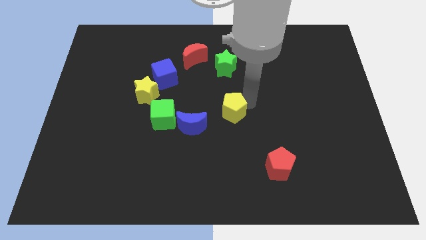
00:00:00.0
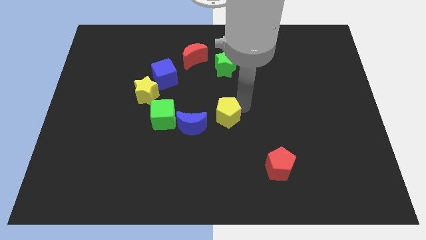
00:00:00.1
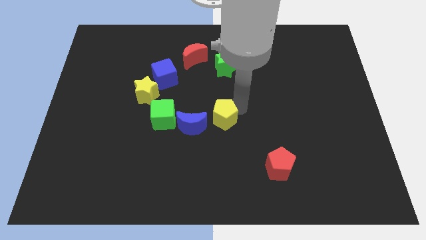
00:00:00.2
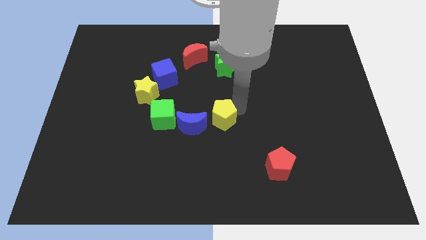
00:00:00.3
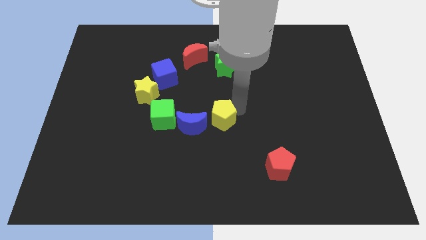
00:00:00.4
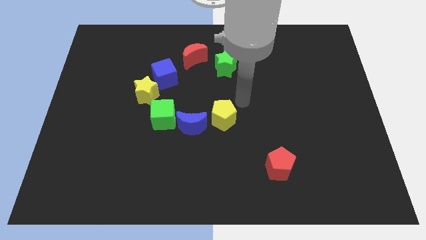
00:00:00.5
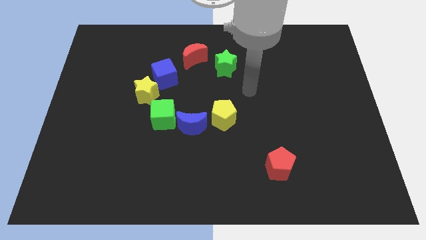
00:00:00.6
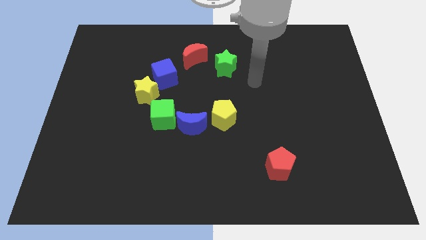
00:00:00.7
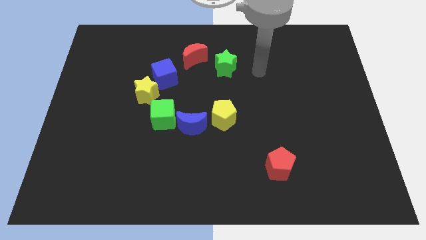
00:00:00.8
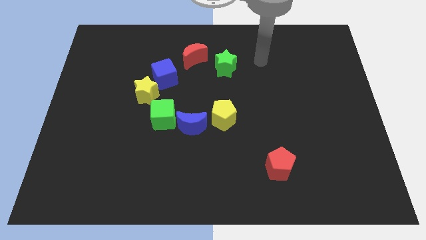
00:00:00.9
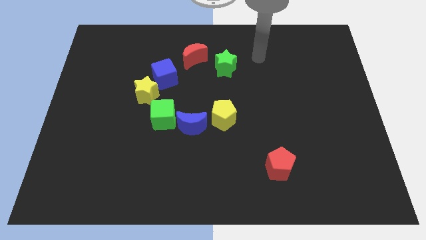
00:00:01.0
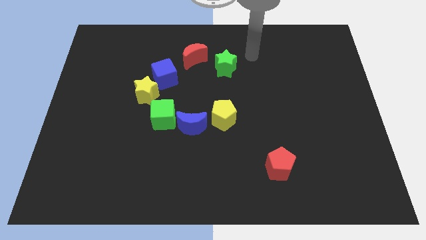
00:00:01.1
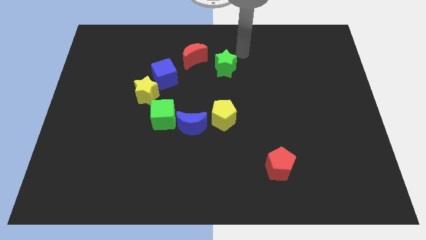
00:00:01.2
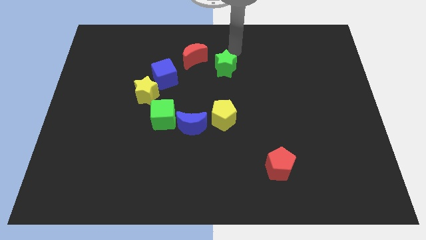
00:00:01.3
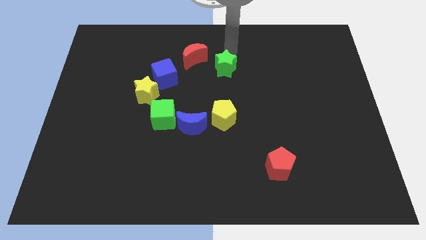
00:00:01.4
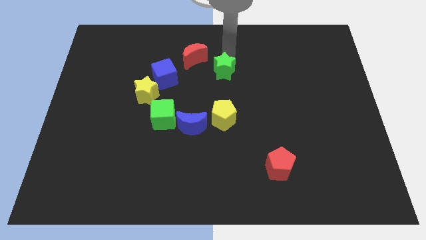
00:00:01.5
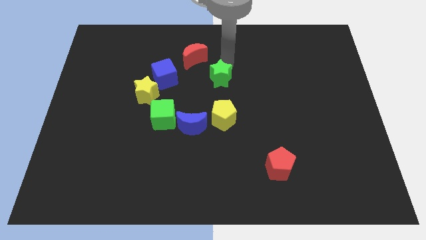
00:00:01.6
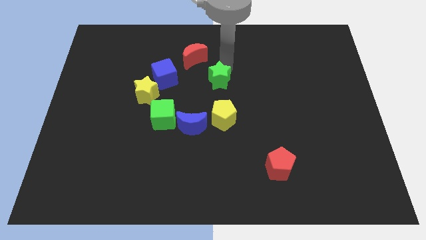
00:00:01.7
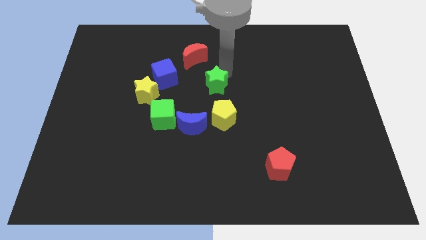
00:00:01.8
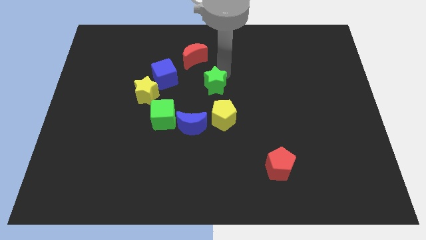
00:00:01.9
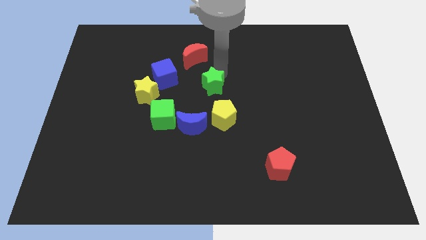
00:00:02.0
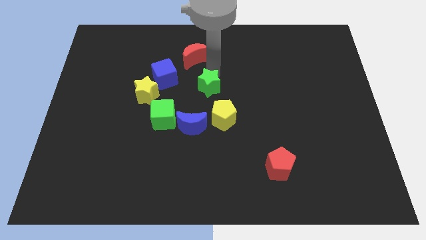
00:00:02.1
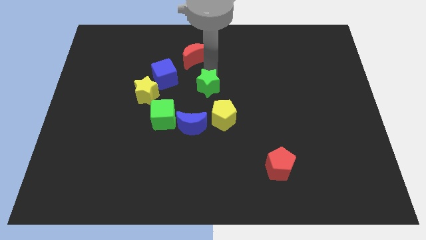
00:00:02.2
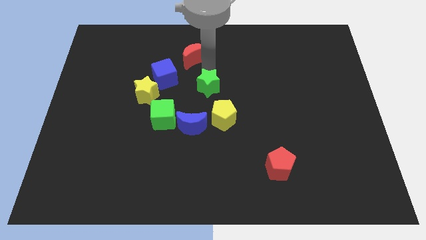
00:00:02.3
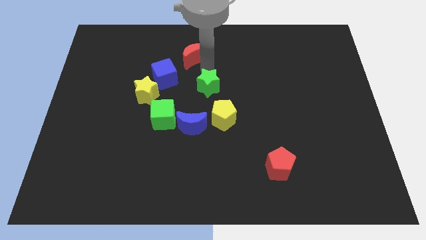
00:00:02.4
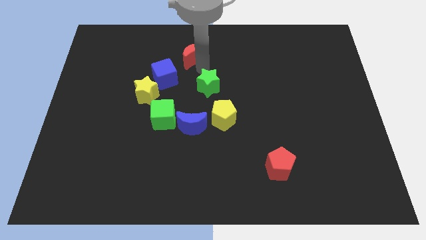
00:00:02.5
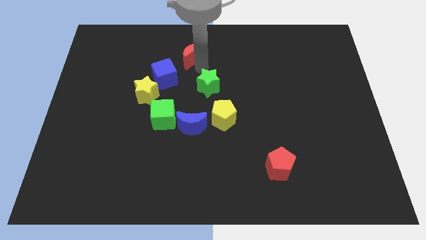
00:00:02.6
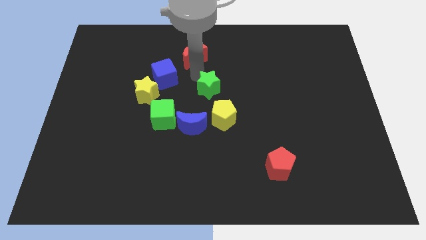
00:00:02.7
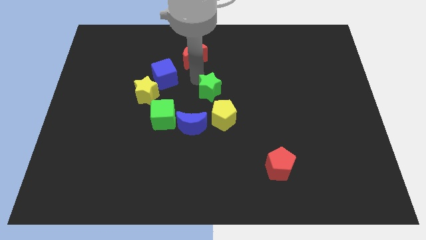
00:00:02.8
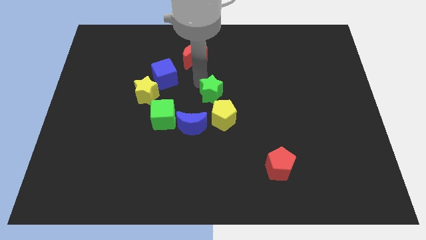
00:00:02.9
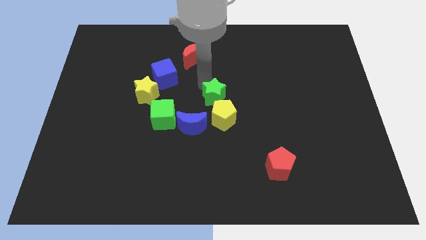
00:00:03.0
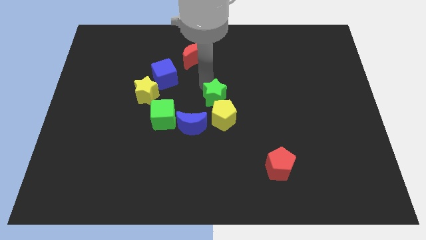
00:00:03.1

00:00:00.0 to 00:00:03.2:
move the green star towards the top of the yellow pentagon

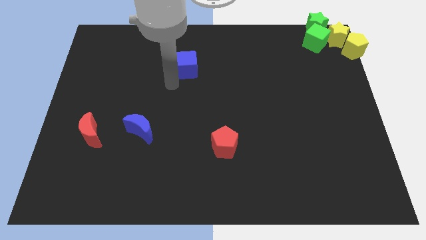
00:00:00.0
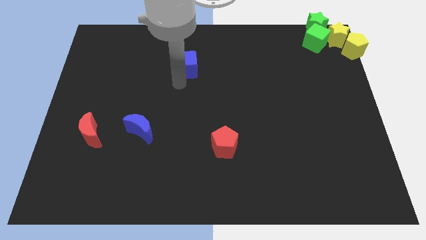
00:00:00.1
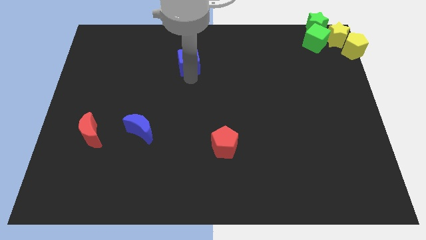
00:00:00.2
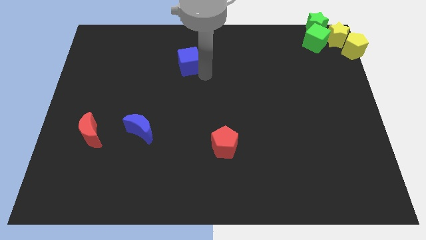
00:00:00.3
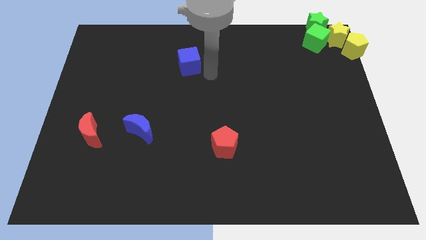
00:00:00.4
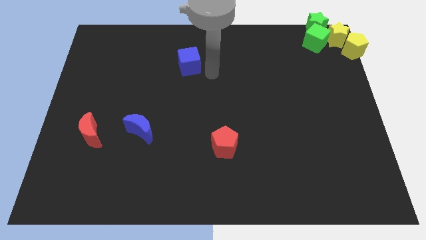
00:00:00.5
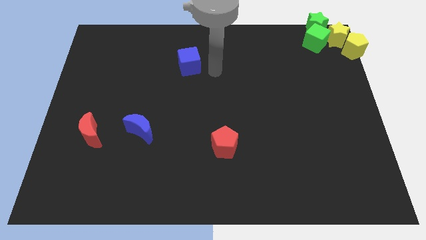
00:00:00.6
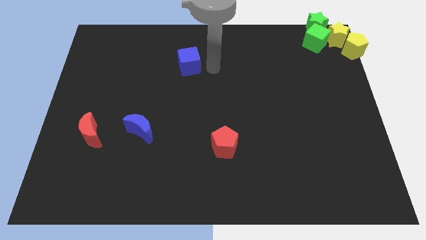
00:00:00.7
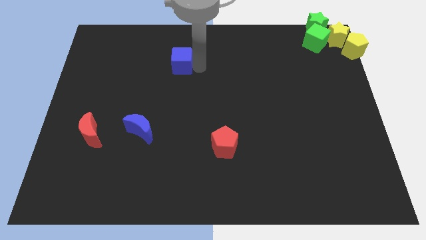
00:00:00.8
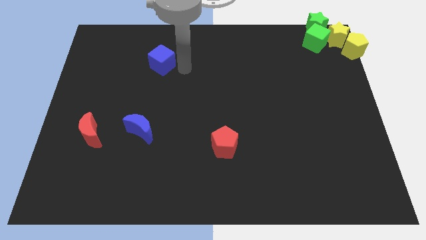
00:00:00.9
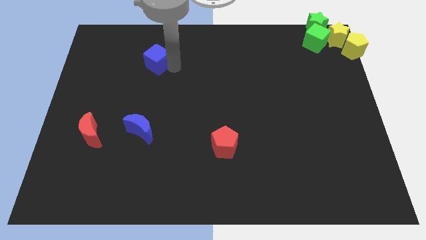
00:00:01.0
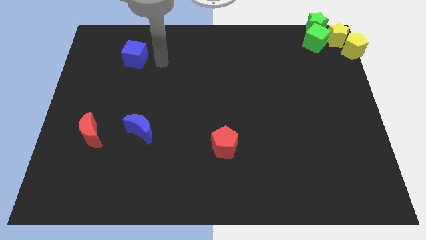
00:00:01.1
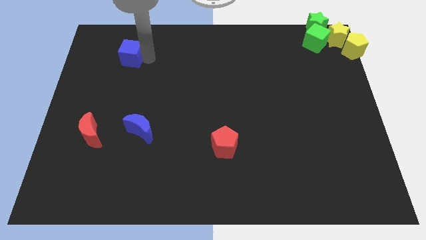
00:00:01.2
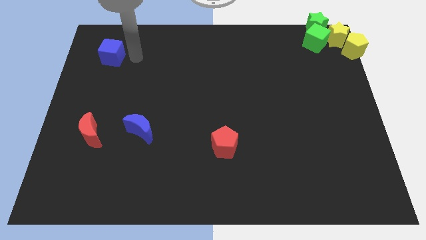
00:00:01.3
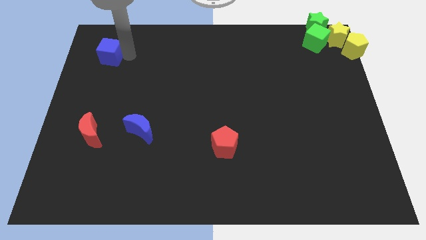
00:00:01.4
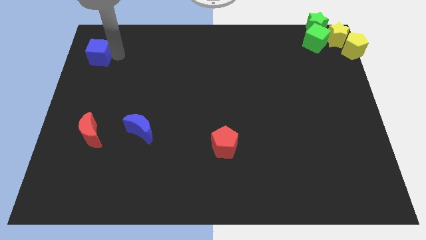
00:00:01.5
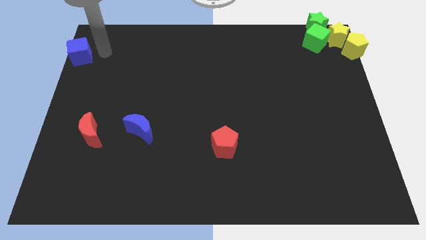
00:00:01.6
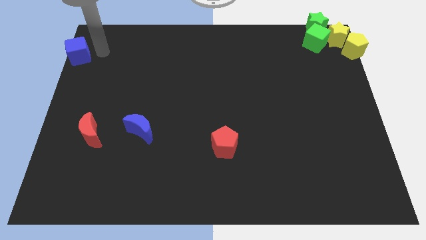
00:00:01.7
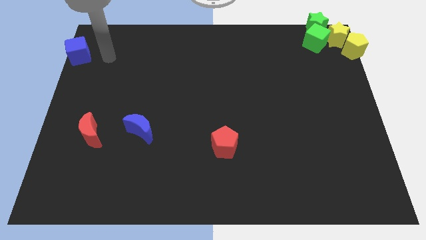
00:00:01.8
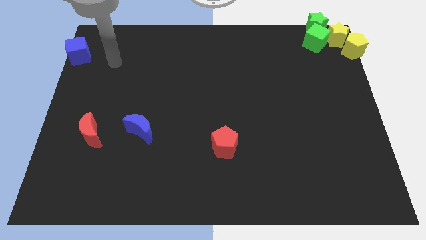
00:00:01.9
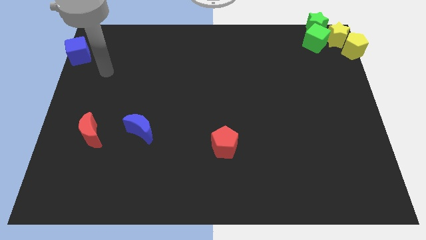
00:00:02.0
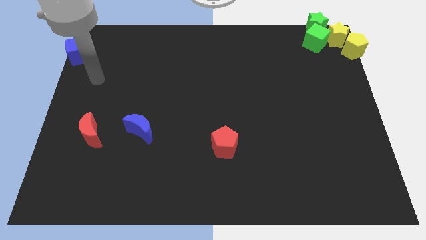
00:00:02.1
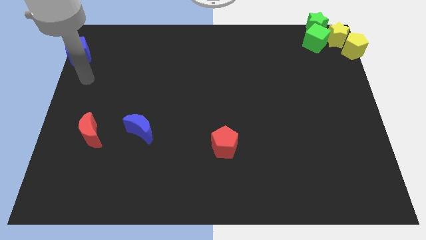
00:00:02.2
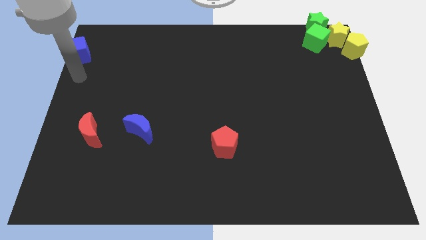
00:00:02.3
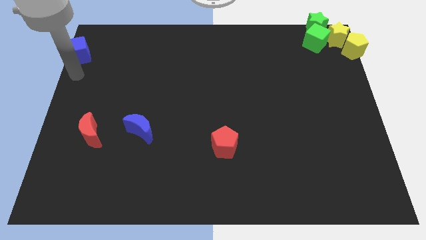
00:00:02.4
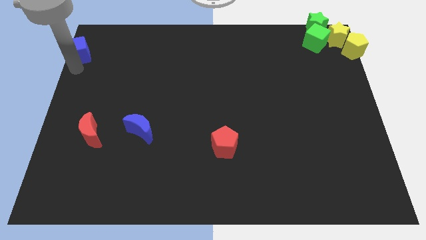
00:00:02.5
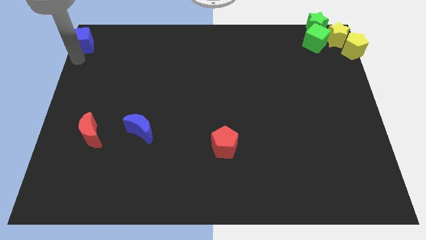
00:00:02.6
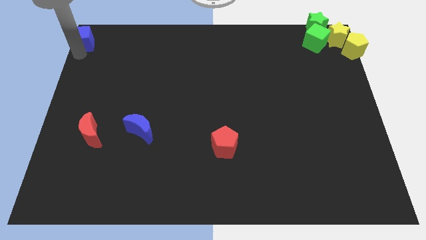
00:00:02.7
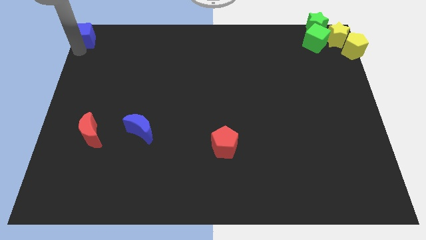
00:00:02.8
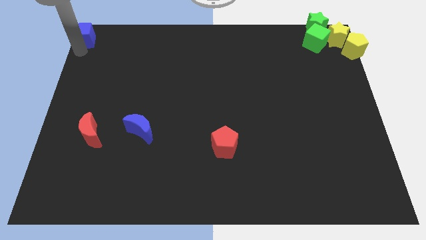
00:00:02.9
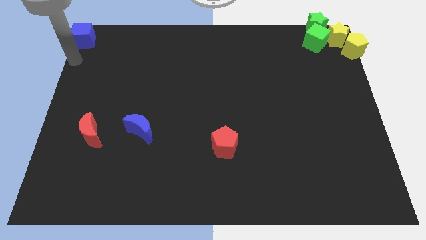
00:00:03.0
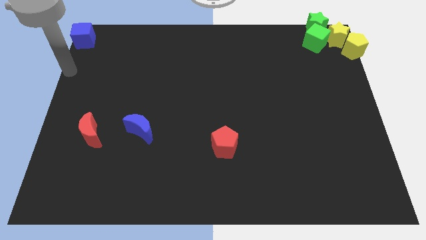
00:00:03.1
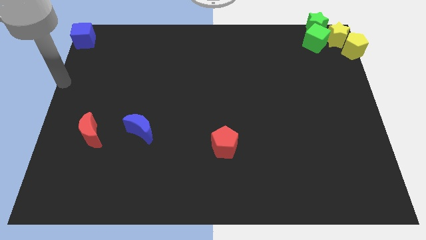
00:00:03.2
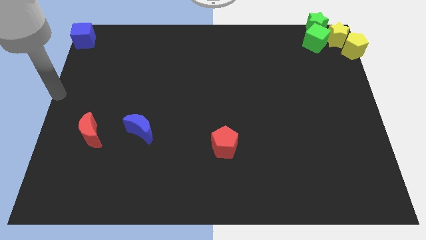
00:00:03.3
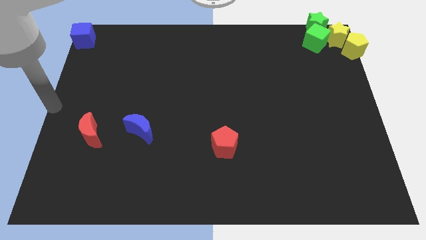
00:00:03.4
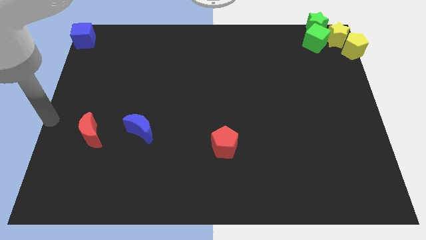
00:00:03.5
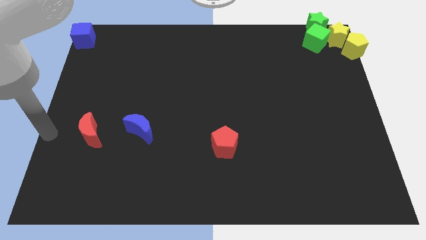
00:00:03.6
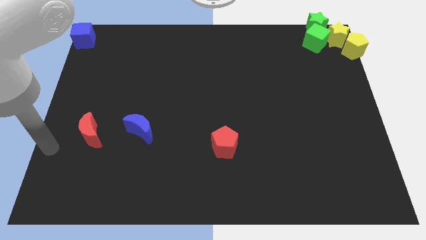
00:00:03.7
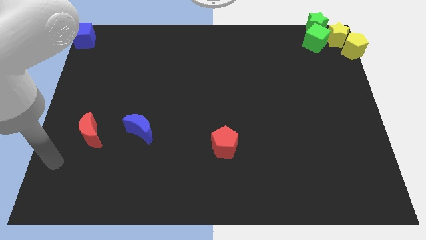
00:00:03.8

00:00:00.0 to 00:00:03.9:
place the blue cube to the top left

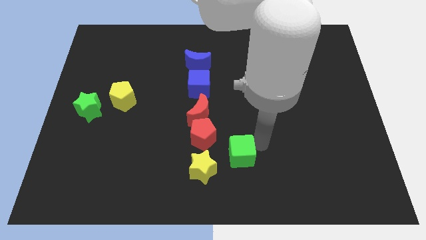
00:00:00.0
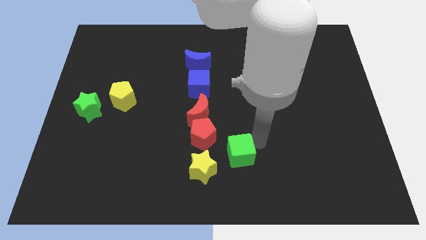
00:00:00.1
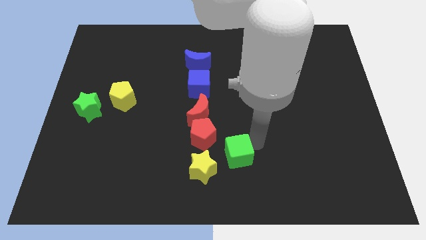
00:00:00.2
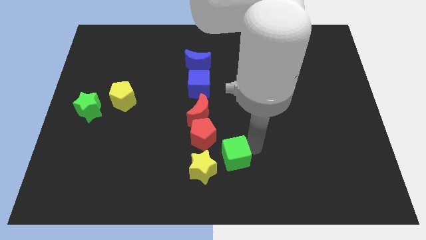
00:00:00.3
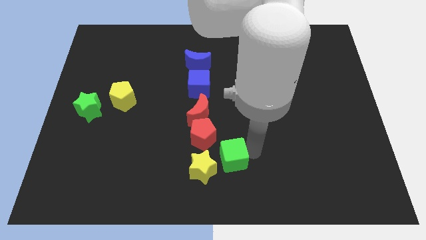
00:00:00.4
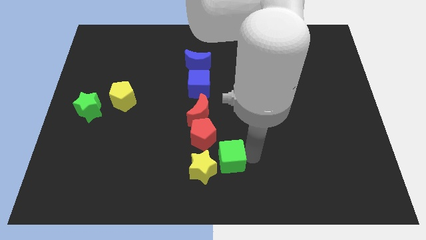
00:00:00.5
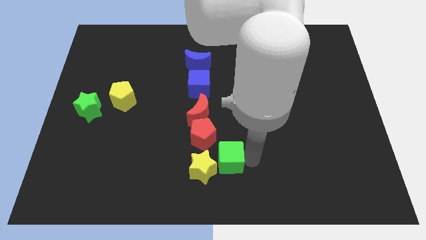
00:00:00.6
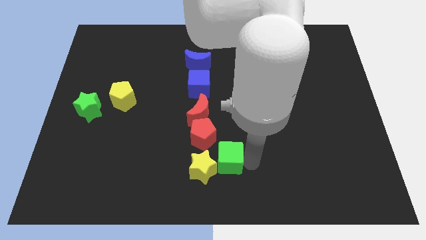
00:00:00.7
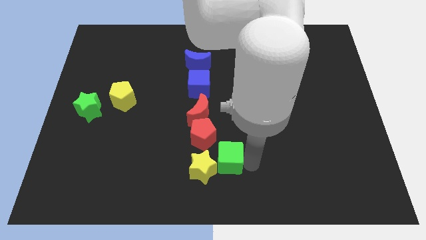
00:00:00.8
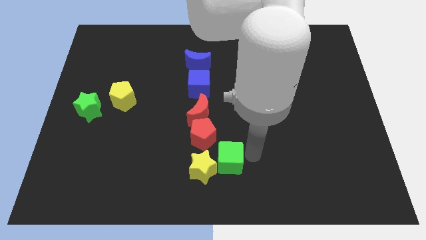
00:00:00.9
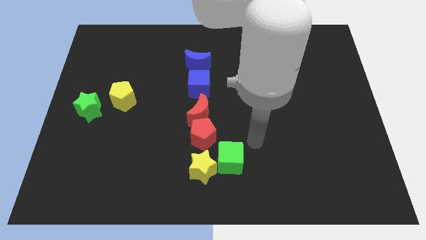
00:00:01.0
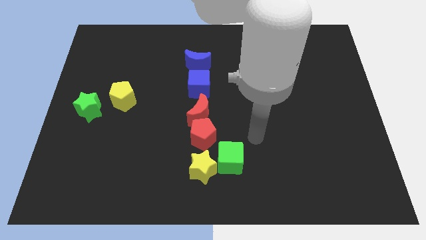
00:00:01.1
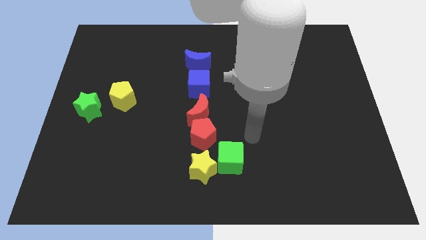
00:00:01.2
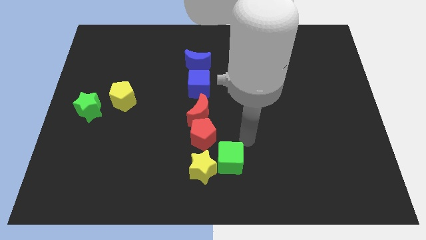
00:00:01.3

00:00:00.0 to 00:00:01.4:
place green cube right to yellow star

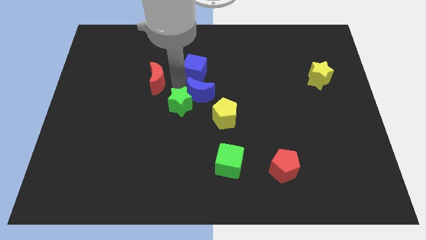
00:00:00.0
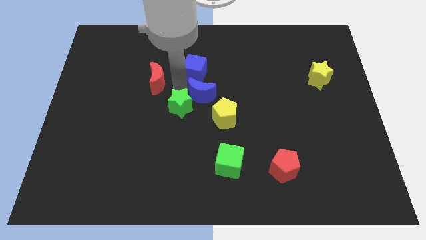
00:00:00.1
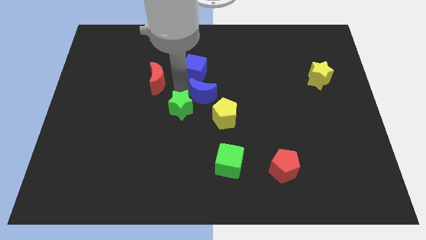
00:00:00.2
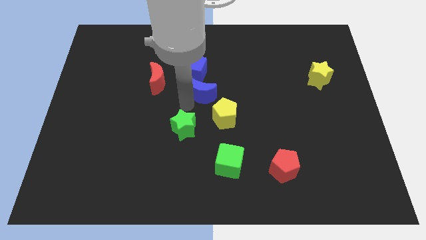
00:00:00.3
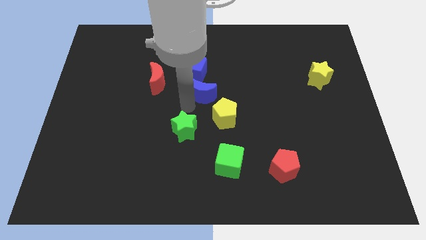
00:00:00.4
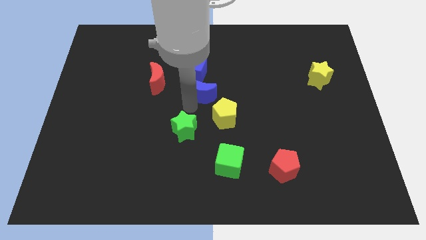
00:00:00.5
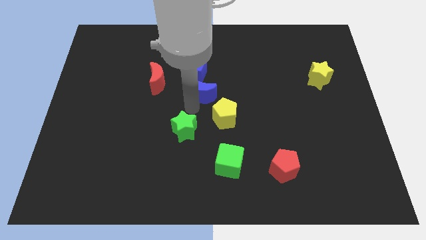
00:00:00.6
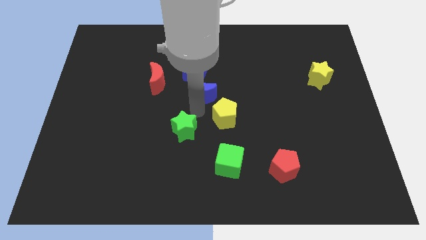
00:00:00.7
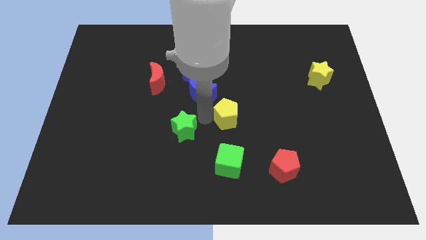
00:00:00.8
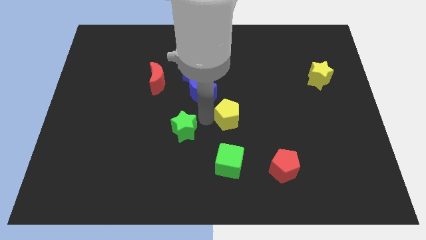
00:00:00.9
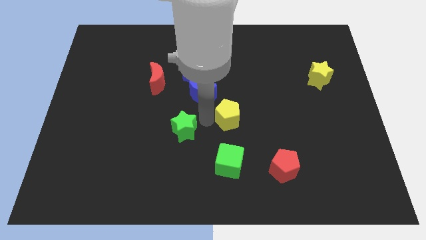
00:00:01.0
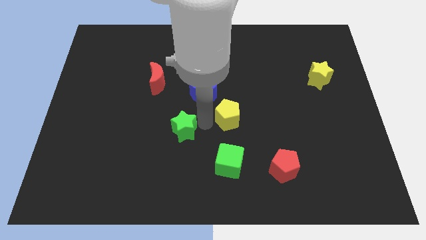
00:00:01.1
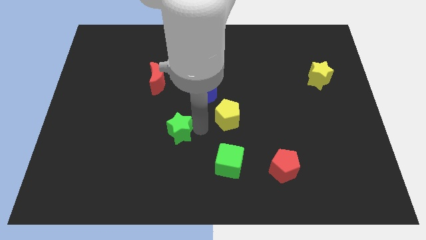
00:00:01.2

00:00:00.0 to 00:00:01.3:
slide the green star down slightly
